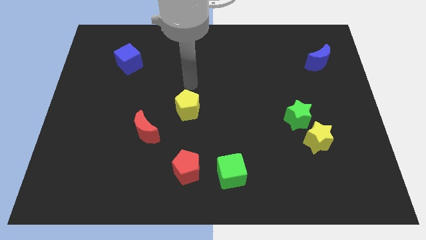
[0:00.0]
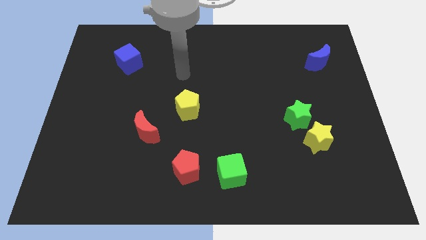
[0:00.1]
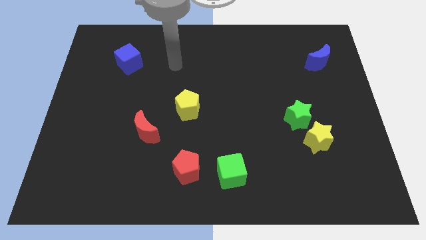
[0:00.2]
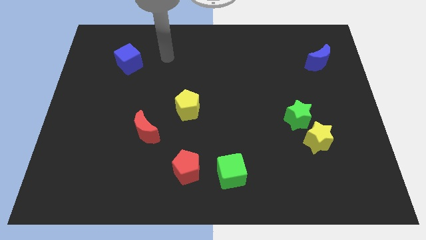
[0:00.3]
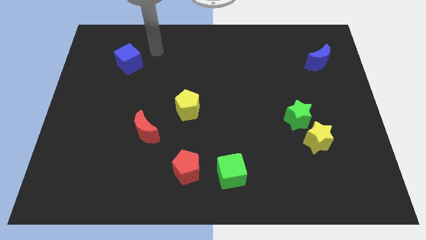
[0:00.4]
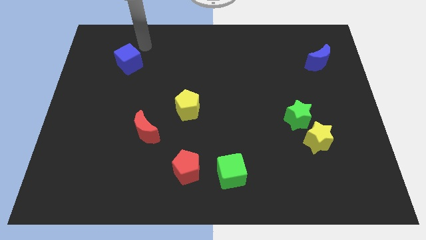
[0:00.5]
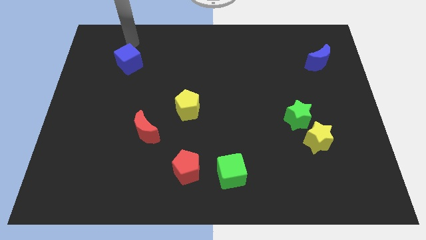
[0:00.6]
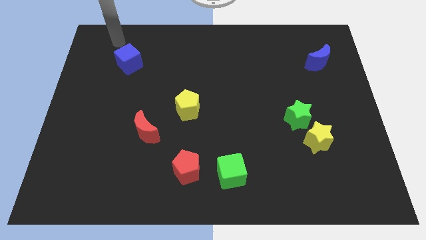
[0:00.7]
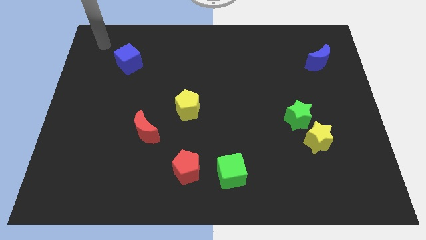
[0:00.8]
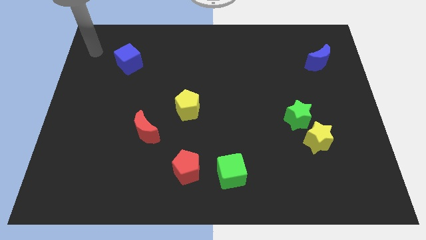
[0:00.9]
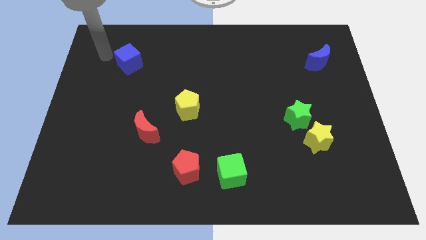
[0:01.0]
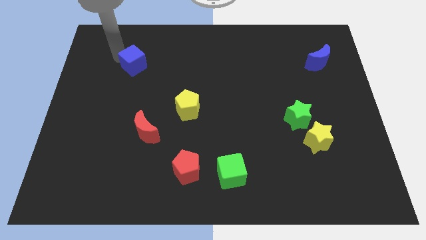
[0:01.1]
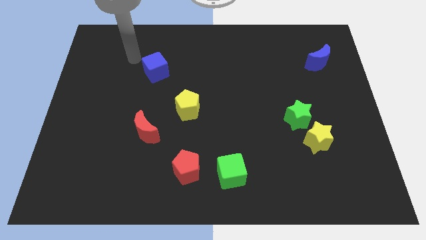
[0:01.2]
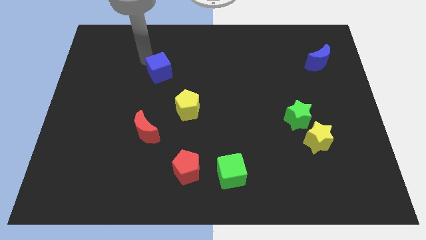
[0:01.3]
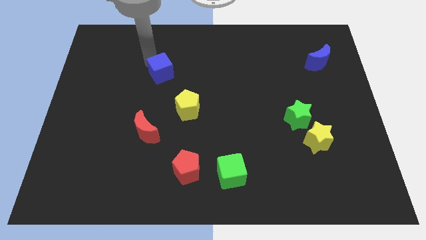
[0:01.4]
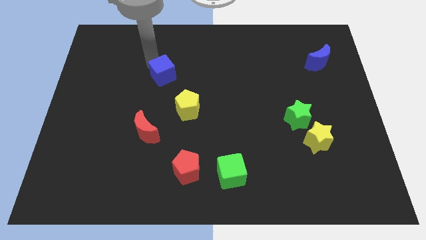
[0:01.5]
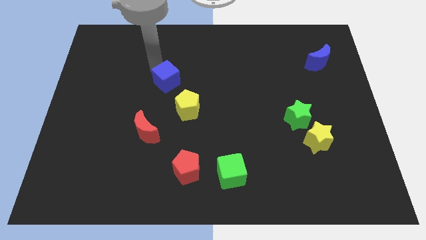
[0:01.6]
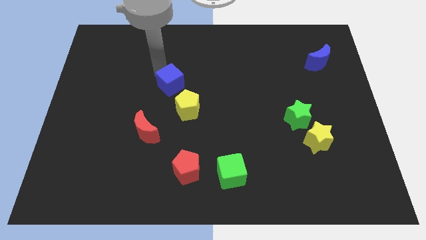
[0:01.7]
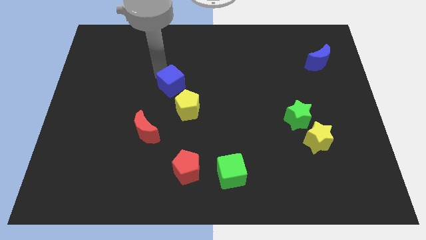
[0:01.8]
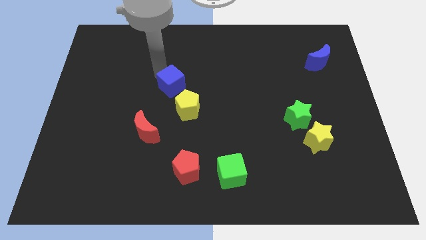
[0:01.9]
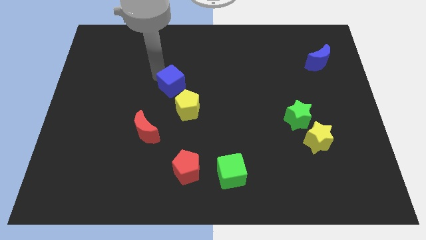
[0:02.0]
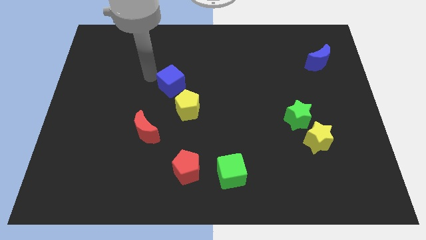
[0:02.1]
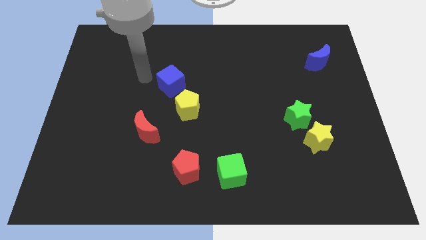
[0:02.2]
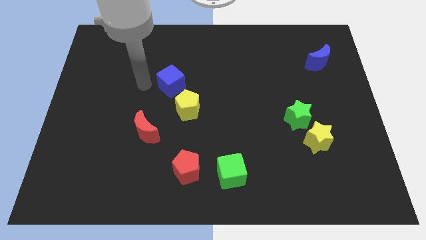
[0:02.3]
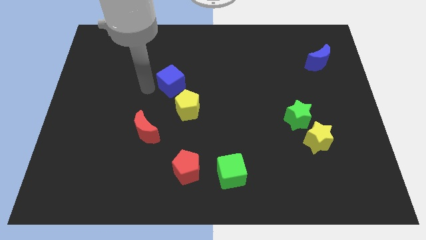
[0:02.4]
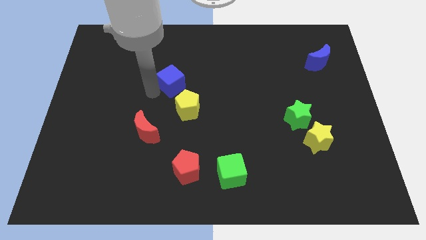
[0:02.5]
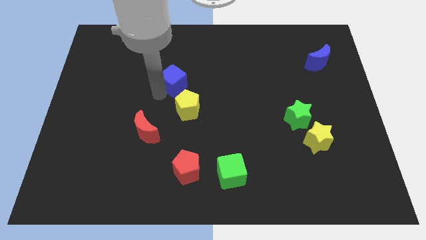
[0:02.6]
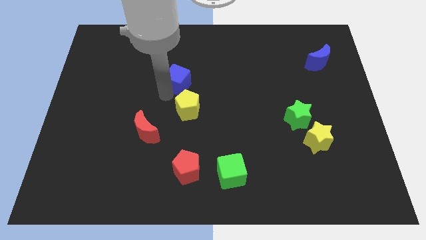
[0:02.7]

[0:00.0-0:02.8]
place the blue cube diagonally top left to the yellow pentagon

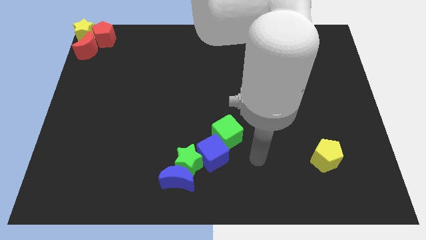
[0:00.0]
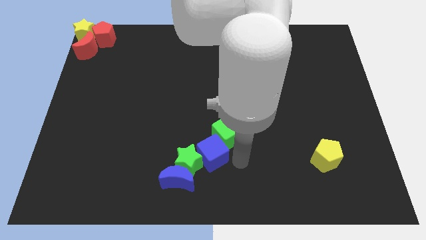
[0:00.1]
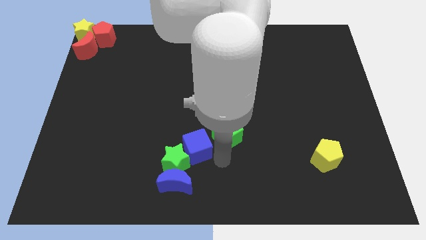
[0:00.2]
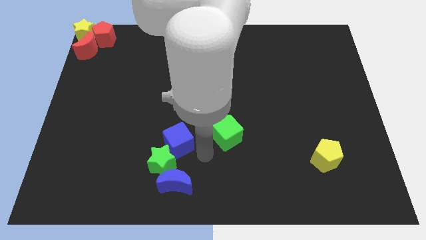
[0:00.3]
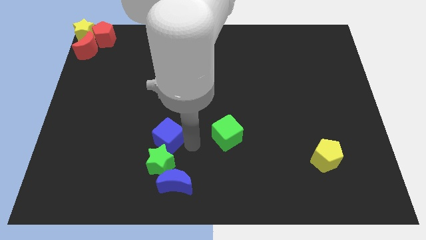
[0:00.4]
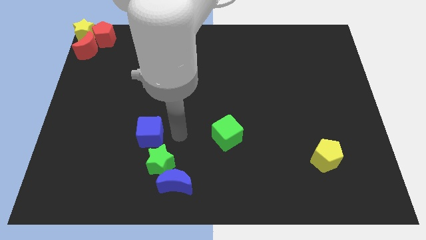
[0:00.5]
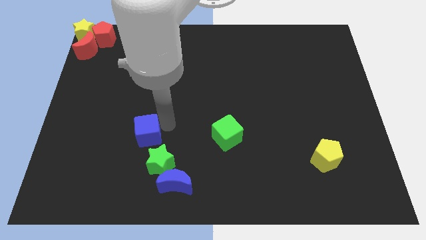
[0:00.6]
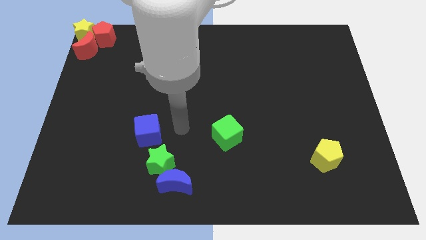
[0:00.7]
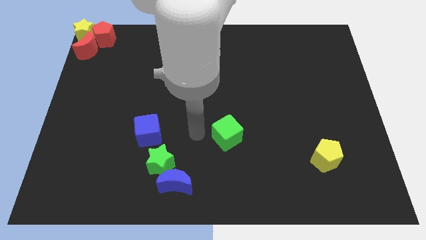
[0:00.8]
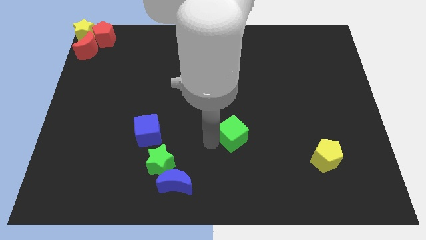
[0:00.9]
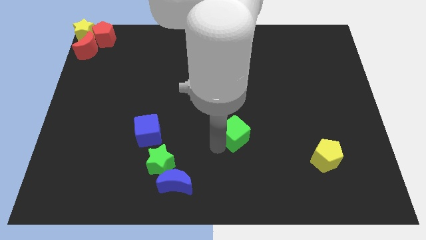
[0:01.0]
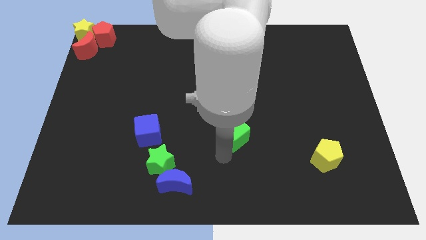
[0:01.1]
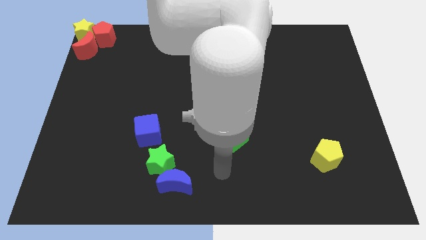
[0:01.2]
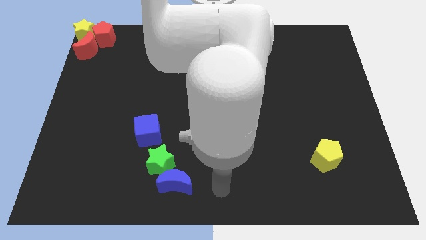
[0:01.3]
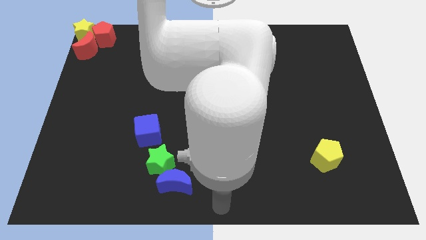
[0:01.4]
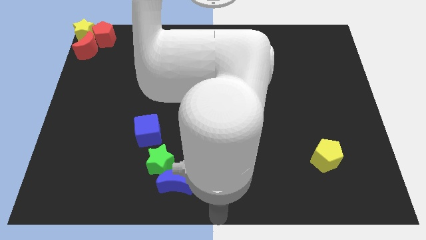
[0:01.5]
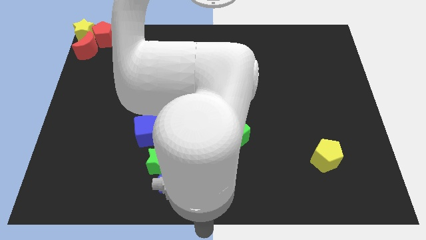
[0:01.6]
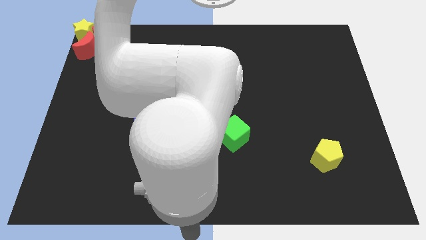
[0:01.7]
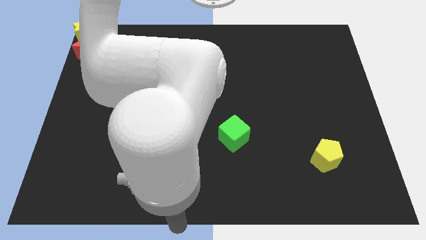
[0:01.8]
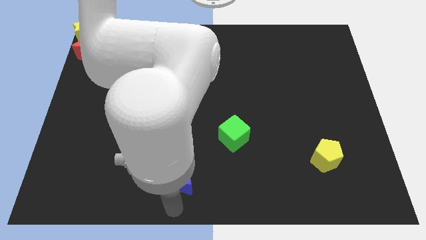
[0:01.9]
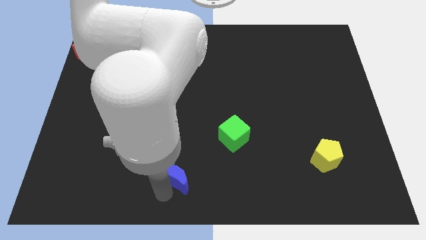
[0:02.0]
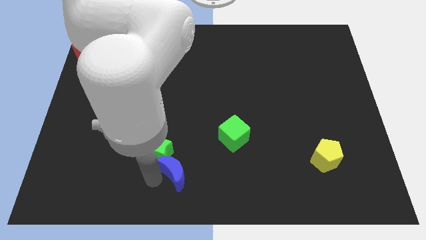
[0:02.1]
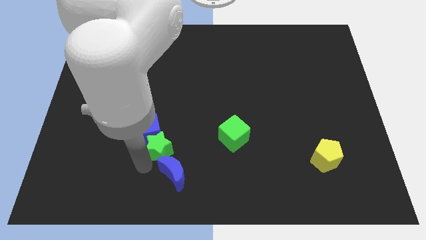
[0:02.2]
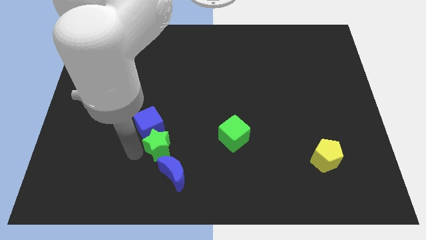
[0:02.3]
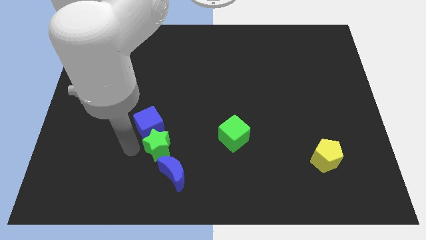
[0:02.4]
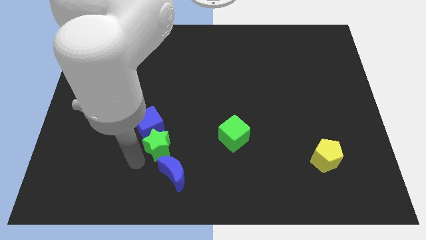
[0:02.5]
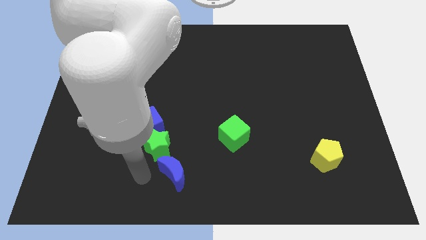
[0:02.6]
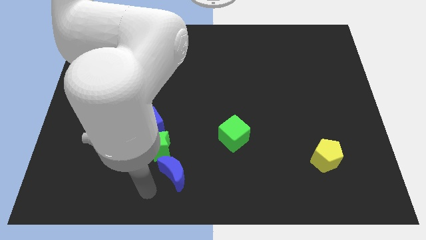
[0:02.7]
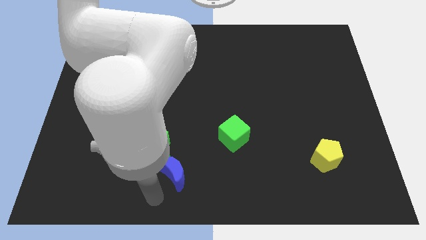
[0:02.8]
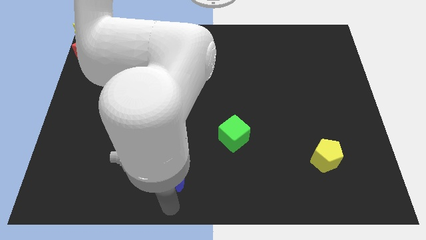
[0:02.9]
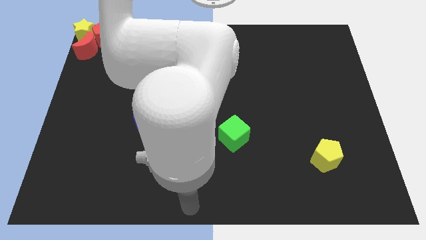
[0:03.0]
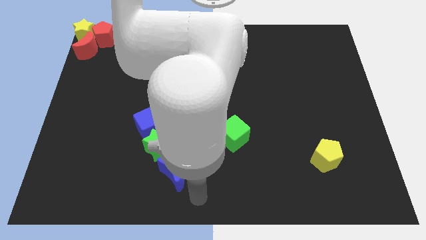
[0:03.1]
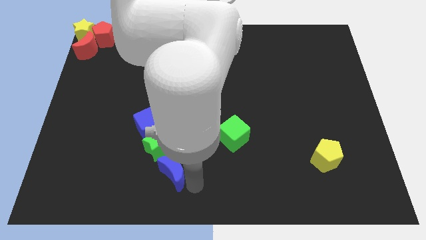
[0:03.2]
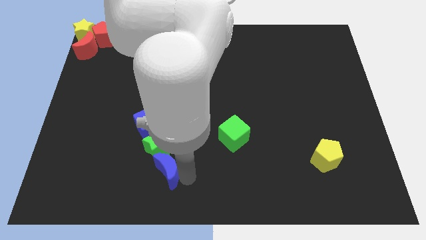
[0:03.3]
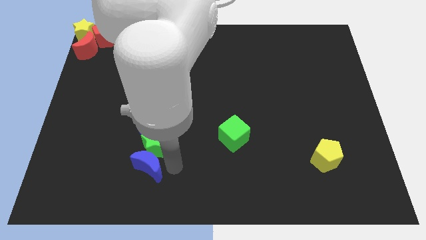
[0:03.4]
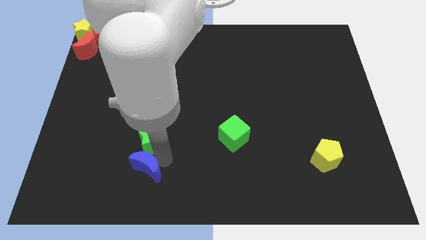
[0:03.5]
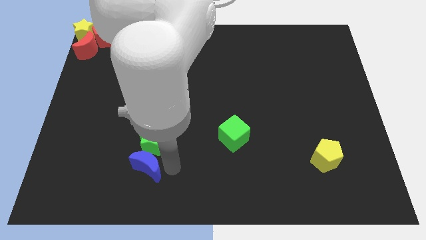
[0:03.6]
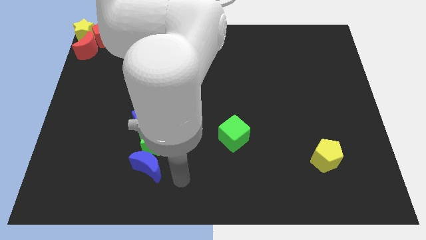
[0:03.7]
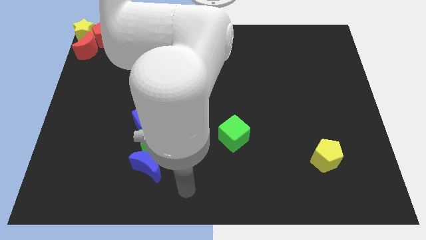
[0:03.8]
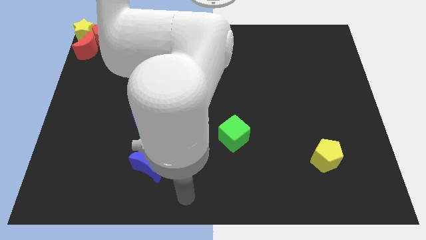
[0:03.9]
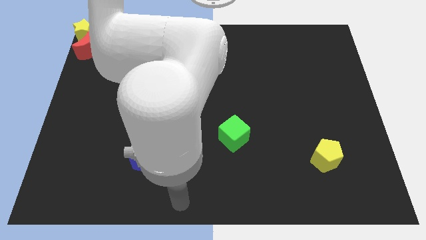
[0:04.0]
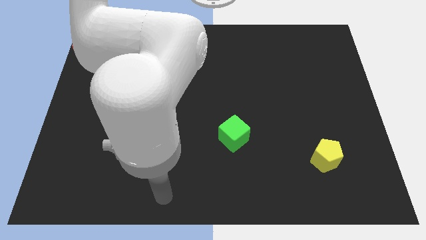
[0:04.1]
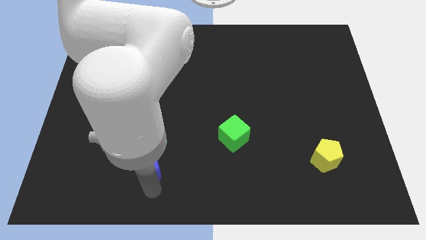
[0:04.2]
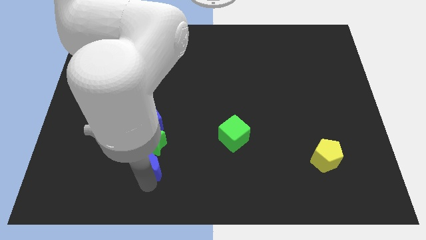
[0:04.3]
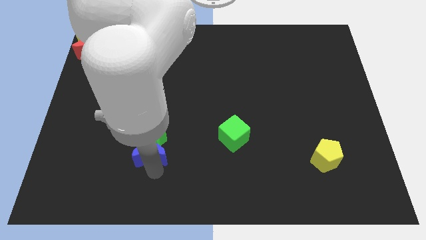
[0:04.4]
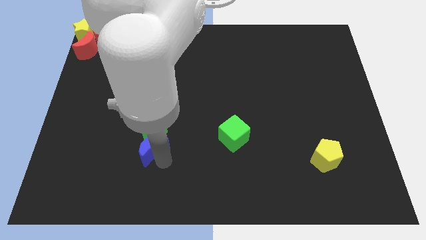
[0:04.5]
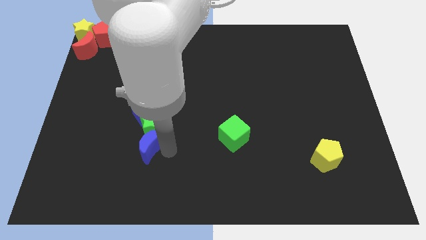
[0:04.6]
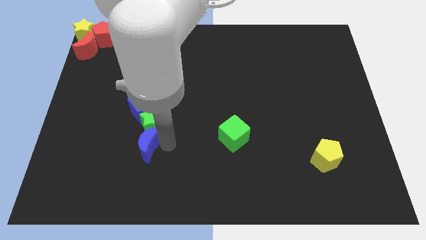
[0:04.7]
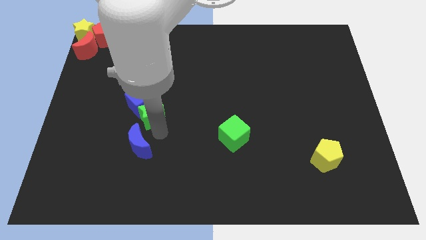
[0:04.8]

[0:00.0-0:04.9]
place the blue moon left to the green cube

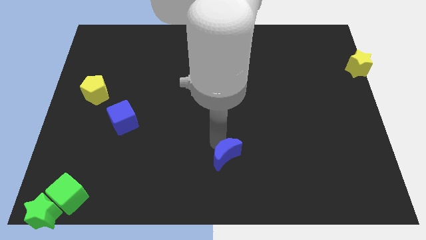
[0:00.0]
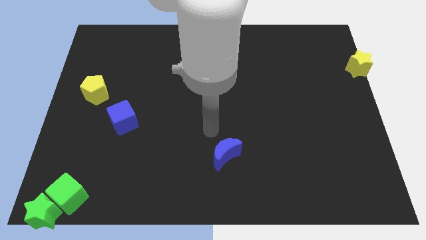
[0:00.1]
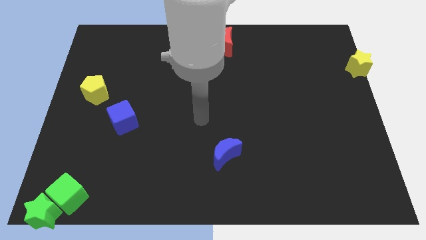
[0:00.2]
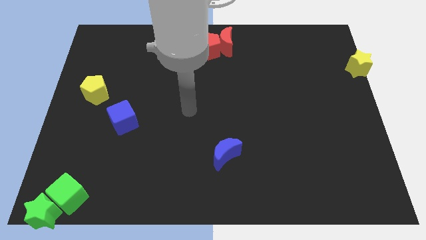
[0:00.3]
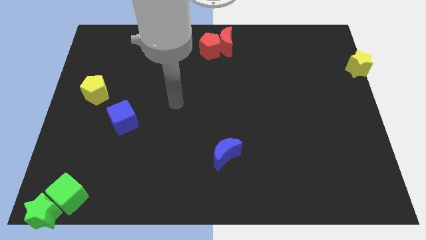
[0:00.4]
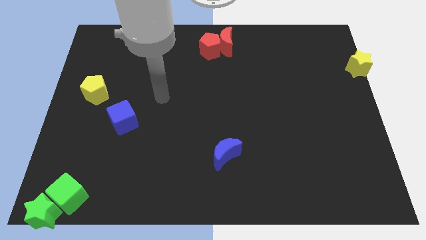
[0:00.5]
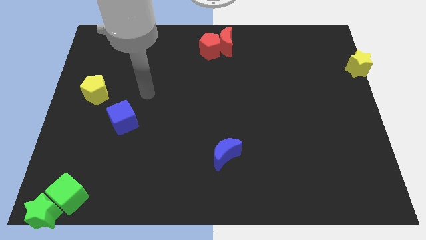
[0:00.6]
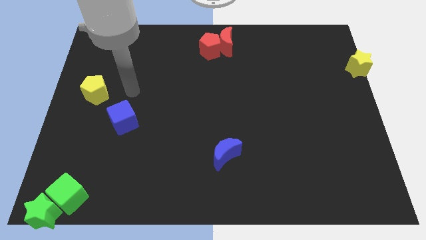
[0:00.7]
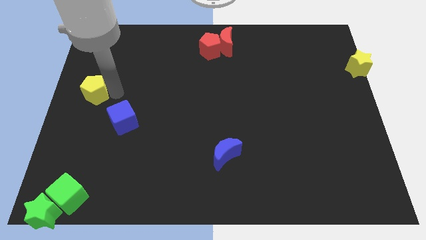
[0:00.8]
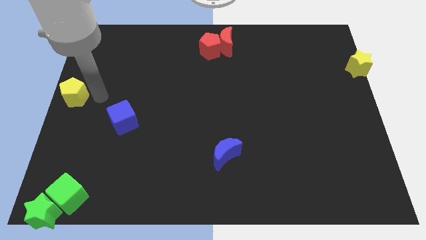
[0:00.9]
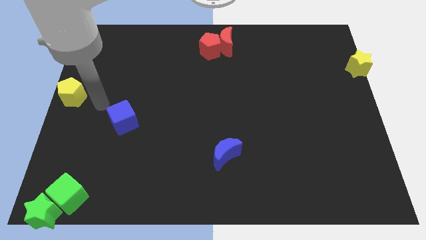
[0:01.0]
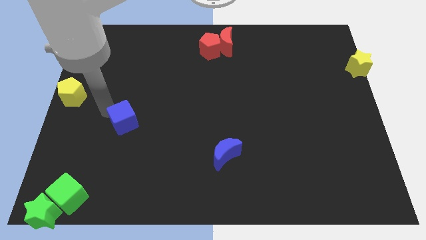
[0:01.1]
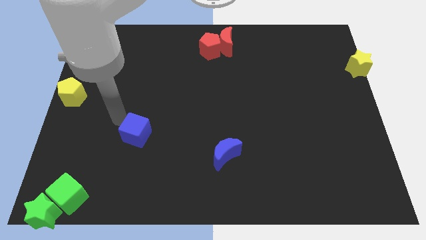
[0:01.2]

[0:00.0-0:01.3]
push yellow pentagon to the left side of the board
